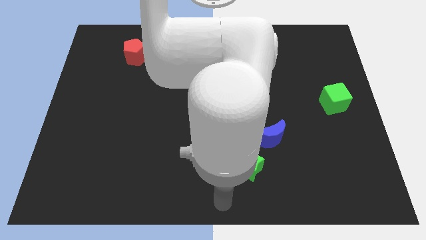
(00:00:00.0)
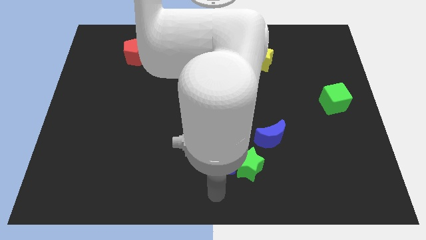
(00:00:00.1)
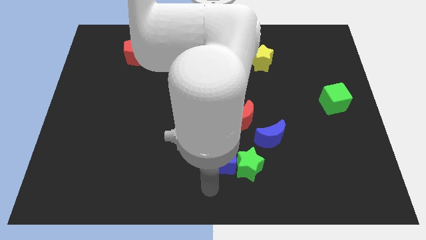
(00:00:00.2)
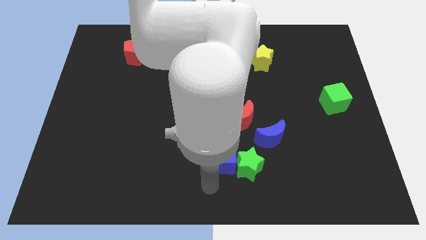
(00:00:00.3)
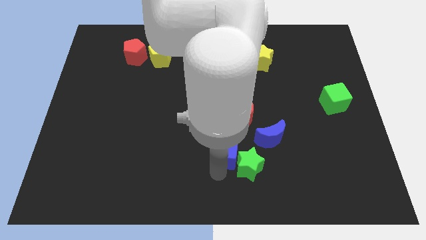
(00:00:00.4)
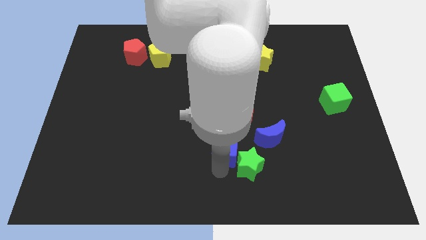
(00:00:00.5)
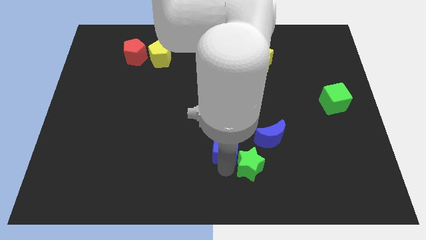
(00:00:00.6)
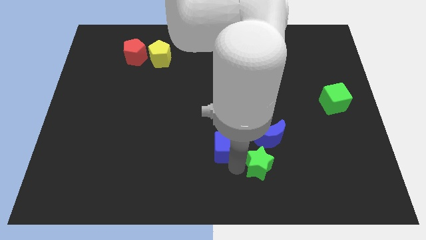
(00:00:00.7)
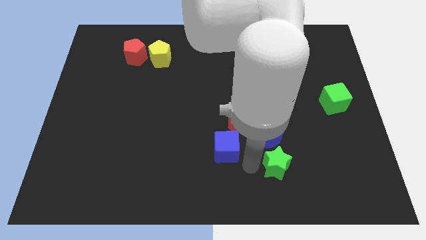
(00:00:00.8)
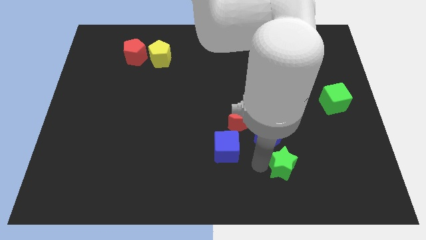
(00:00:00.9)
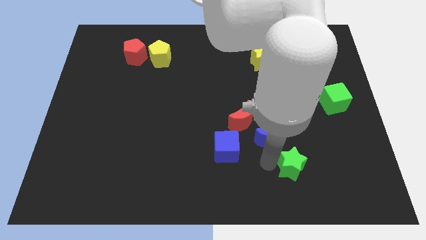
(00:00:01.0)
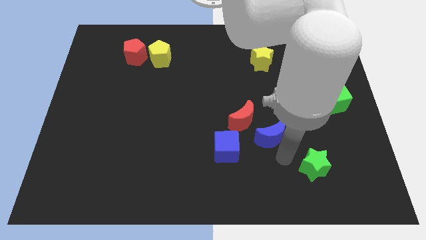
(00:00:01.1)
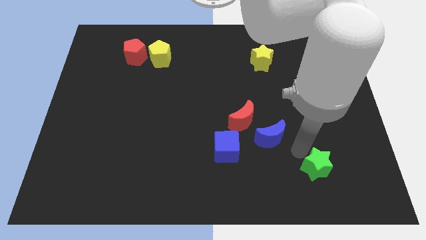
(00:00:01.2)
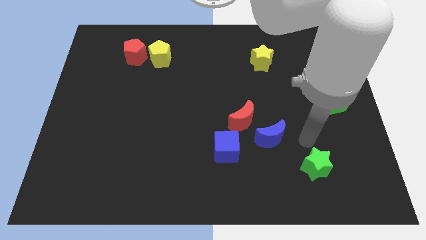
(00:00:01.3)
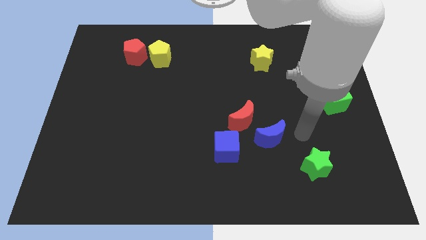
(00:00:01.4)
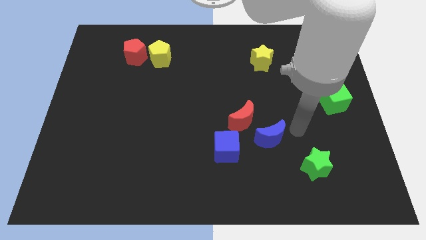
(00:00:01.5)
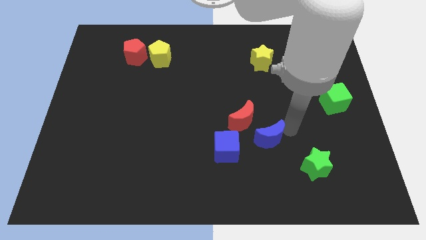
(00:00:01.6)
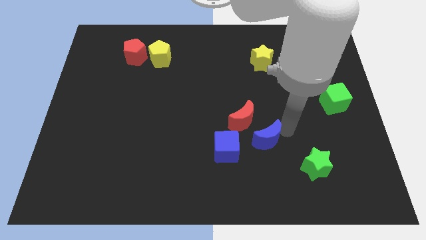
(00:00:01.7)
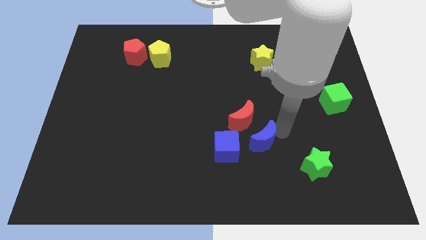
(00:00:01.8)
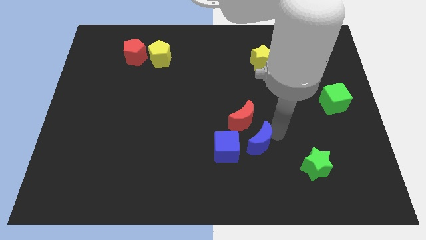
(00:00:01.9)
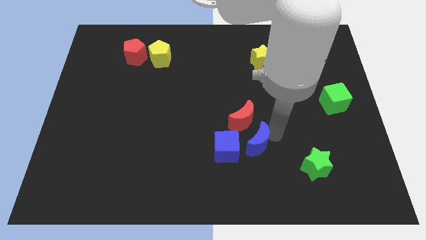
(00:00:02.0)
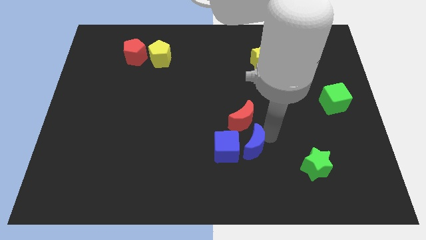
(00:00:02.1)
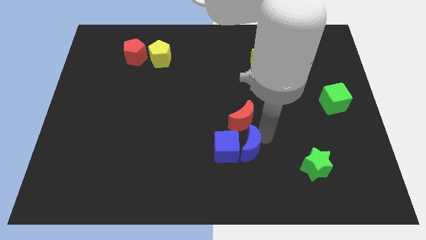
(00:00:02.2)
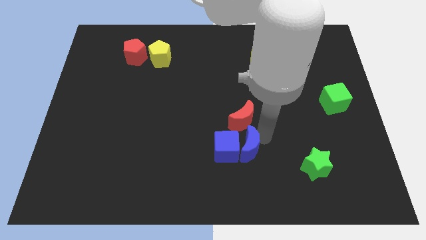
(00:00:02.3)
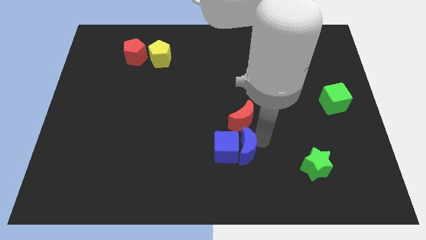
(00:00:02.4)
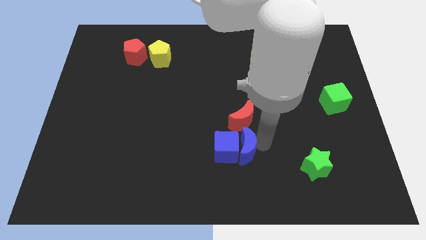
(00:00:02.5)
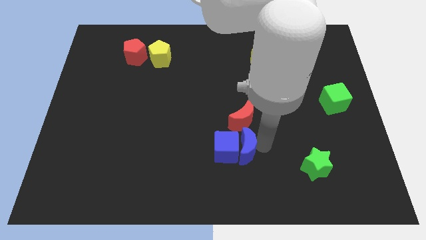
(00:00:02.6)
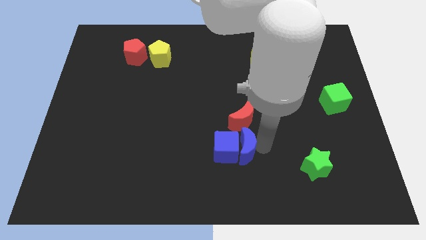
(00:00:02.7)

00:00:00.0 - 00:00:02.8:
move the blue crescent below the red crescent

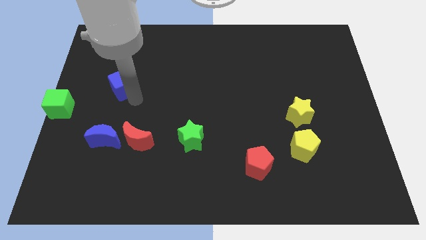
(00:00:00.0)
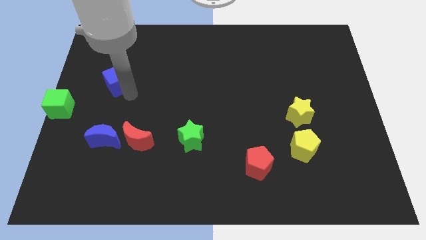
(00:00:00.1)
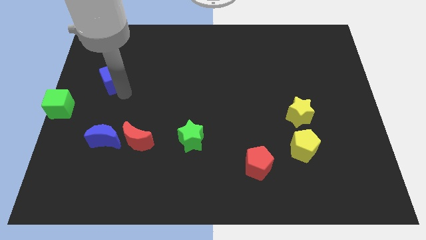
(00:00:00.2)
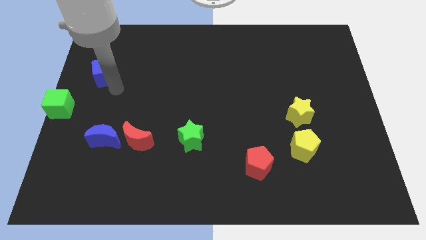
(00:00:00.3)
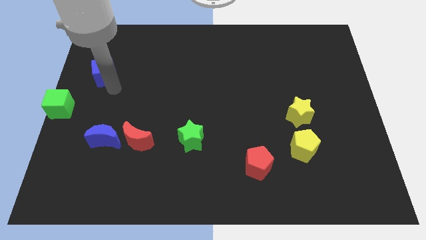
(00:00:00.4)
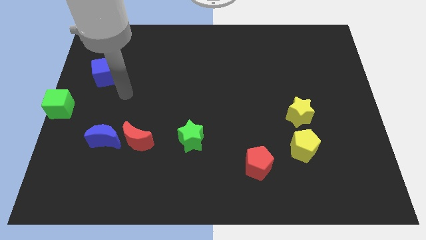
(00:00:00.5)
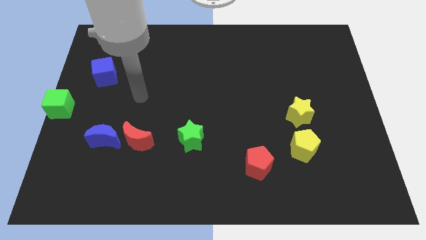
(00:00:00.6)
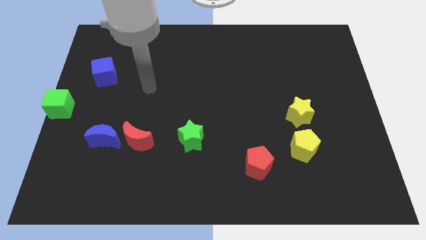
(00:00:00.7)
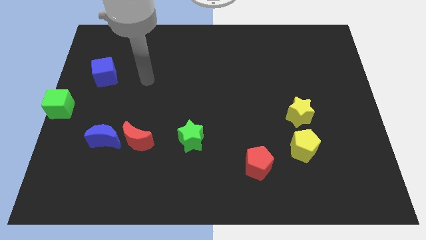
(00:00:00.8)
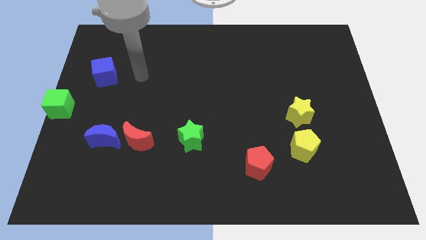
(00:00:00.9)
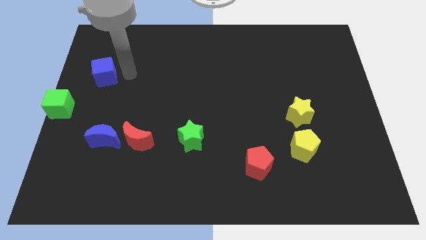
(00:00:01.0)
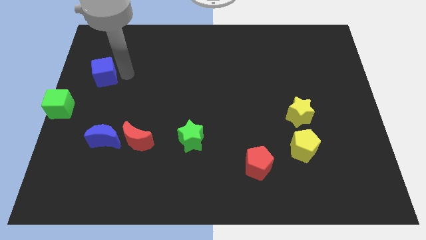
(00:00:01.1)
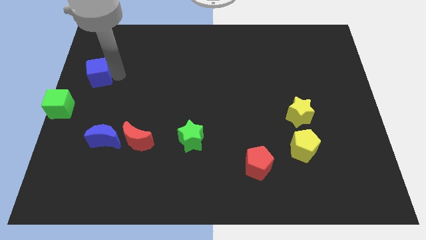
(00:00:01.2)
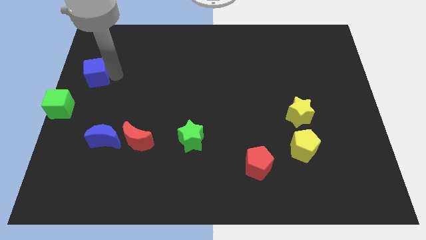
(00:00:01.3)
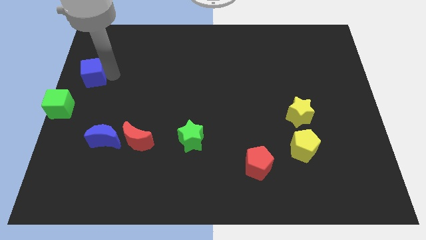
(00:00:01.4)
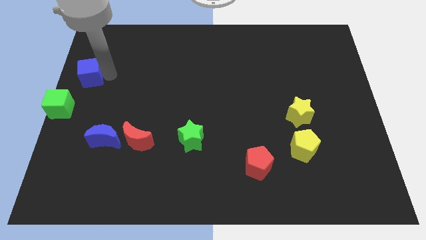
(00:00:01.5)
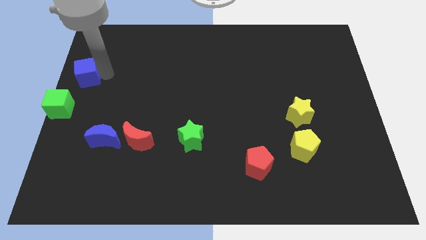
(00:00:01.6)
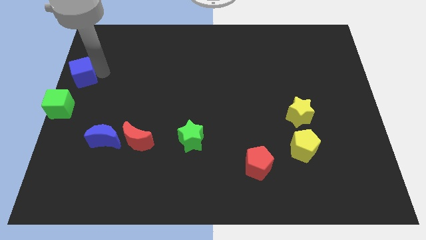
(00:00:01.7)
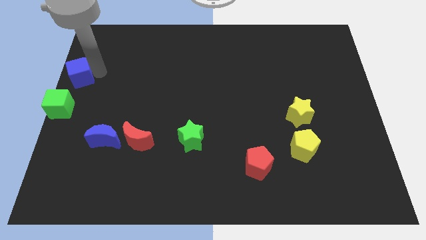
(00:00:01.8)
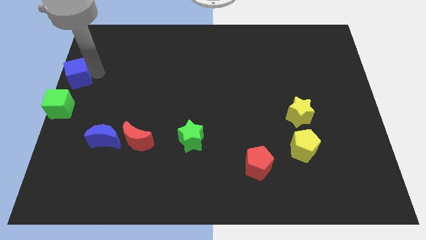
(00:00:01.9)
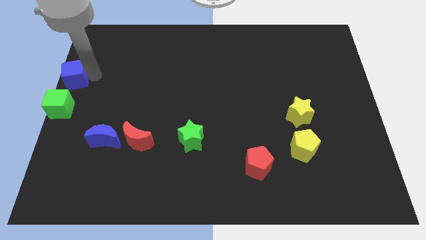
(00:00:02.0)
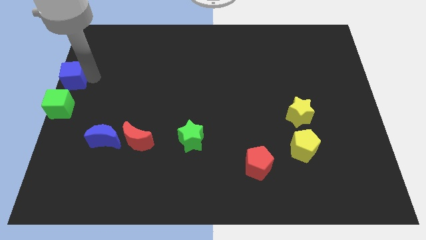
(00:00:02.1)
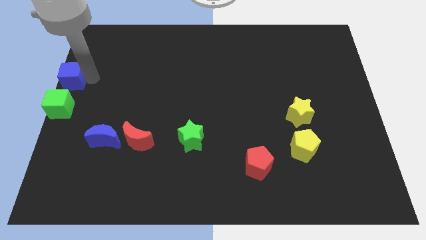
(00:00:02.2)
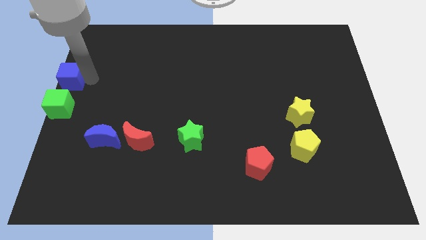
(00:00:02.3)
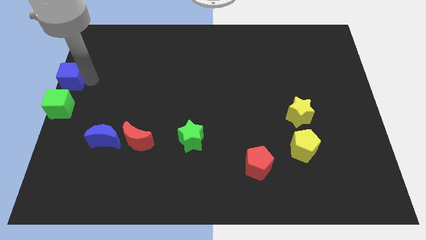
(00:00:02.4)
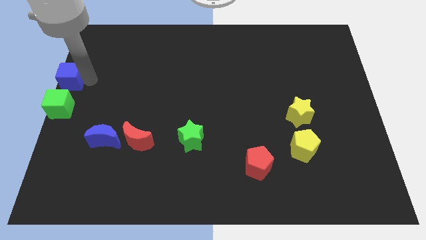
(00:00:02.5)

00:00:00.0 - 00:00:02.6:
move the blue cube to the top of the green cube

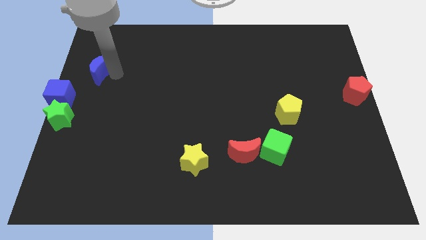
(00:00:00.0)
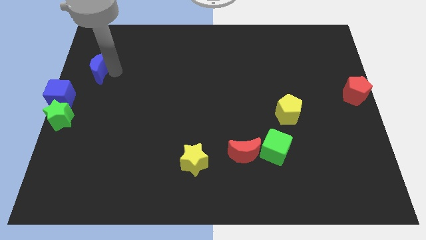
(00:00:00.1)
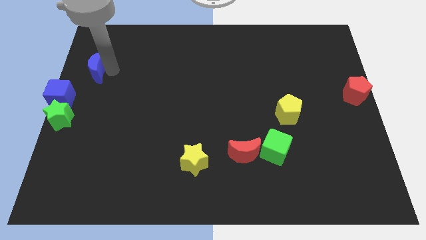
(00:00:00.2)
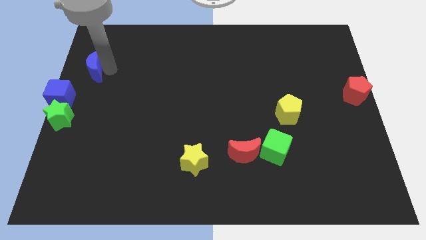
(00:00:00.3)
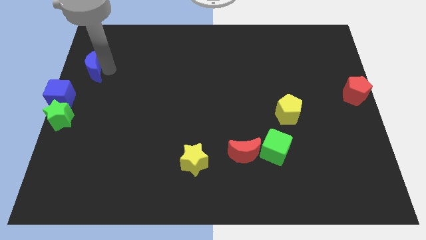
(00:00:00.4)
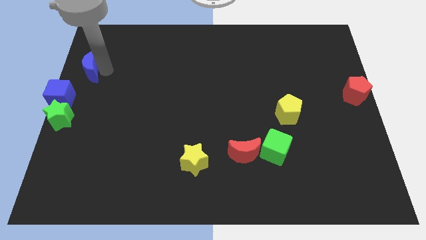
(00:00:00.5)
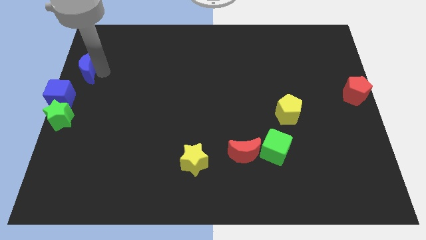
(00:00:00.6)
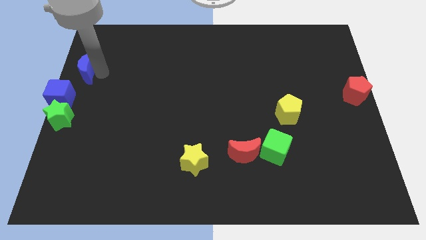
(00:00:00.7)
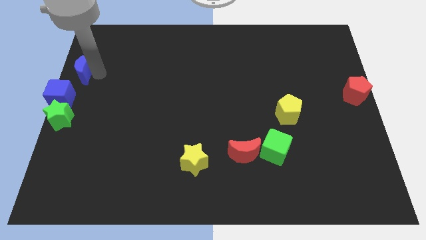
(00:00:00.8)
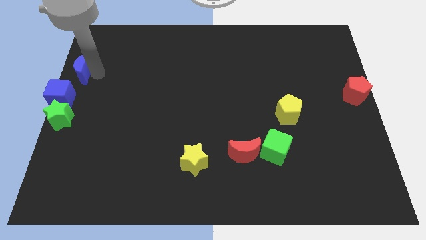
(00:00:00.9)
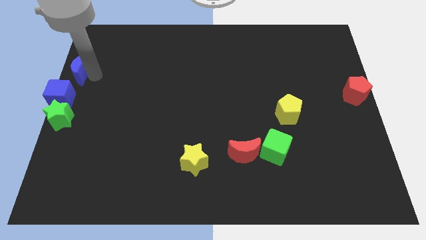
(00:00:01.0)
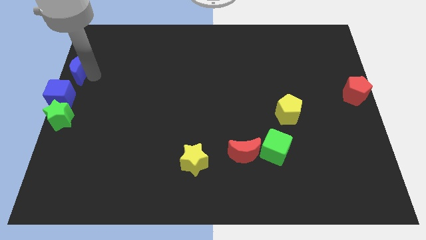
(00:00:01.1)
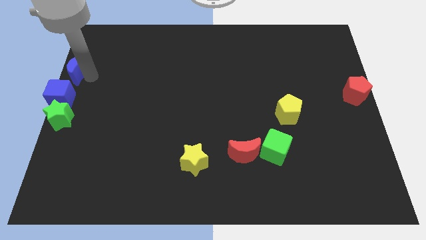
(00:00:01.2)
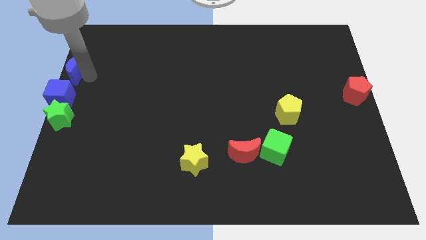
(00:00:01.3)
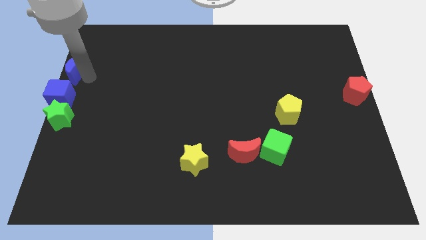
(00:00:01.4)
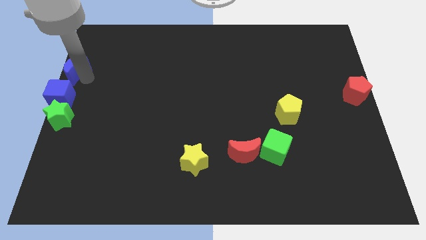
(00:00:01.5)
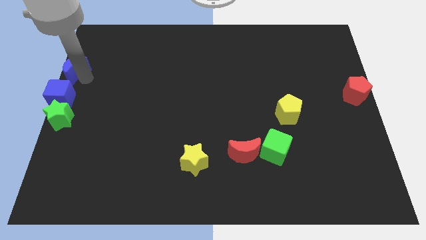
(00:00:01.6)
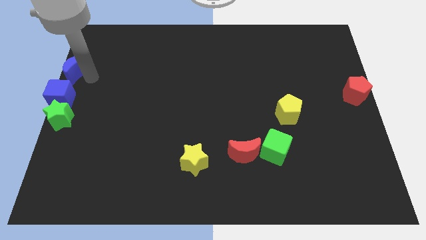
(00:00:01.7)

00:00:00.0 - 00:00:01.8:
push the blue crescent to the top of the blue cube

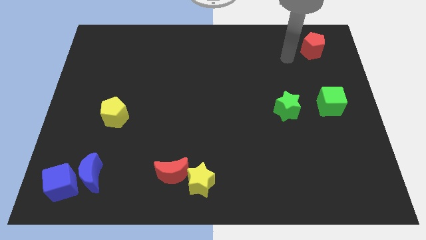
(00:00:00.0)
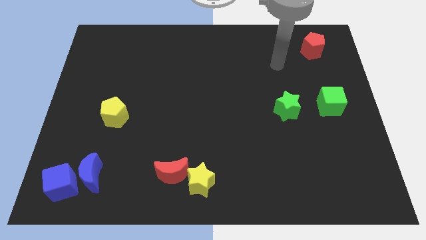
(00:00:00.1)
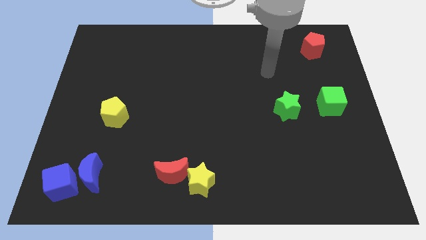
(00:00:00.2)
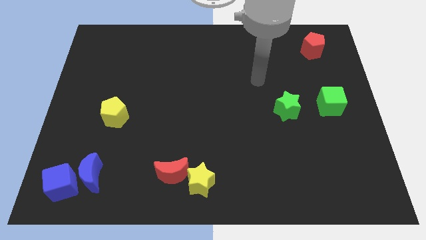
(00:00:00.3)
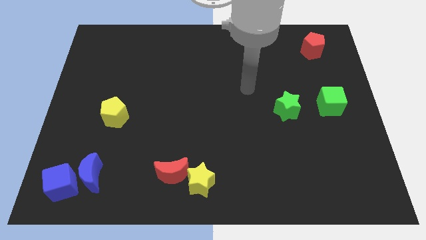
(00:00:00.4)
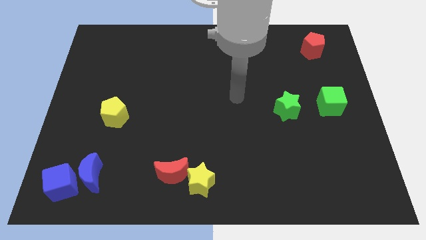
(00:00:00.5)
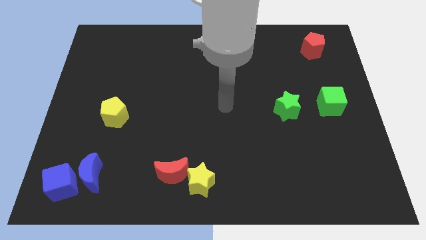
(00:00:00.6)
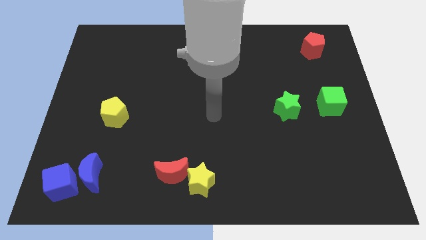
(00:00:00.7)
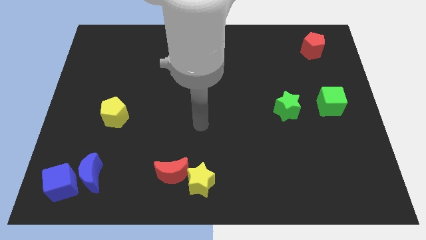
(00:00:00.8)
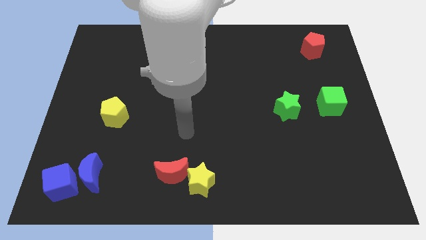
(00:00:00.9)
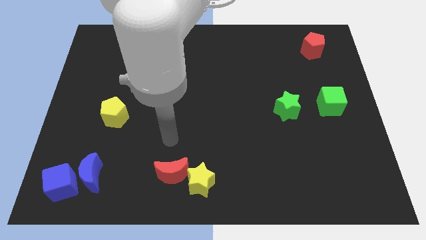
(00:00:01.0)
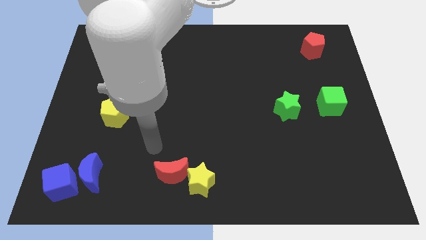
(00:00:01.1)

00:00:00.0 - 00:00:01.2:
move the arm from the red pentagon

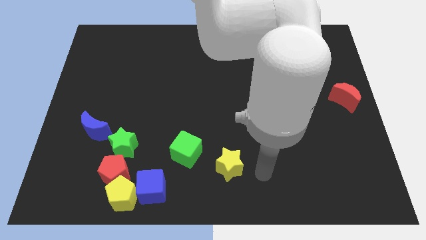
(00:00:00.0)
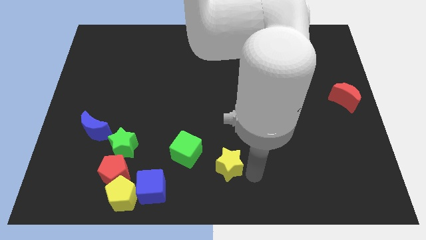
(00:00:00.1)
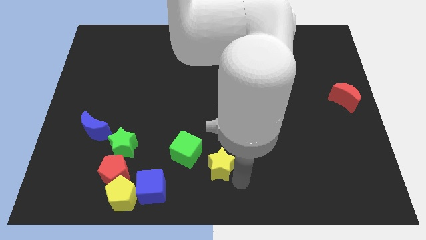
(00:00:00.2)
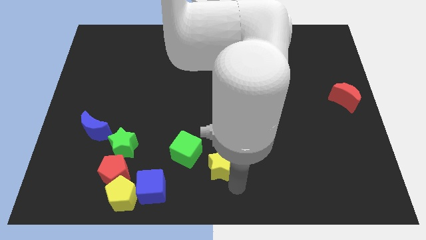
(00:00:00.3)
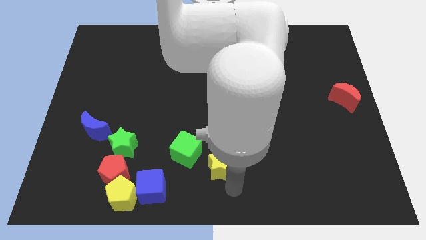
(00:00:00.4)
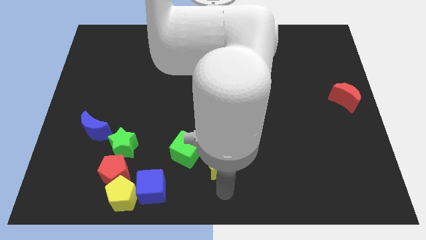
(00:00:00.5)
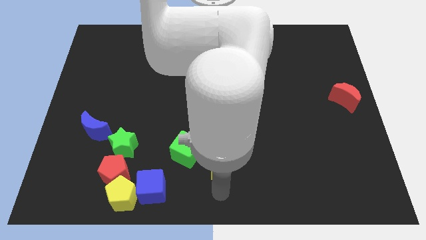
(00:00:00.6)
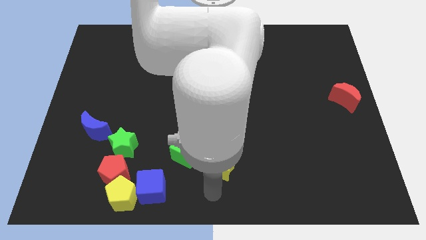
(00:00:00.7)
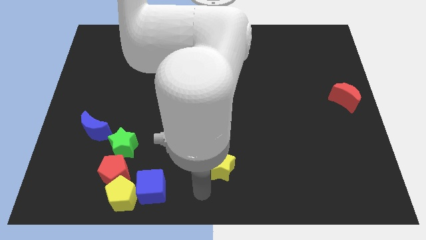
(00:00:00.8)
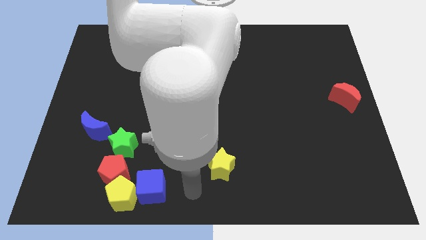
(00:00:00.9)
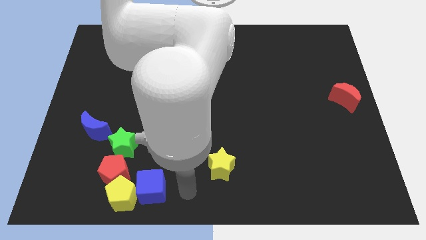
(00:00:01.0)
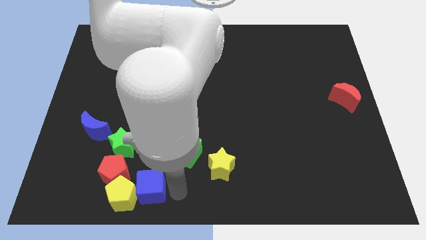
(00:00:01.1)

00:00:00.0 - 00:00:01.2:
place the arm right to the blue cube
